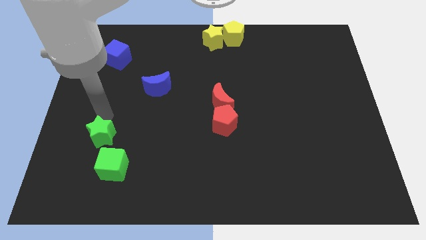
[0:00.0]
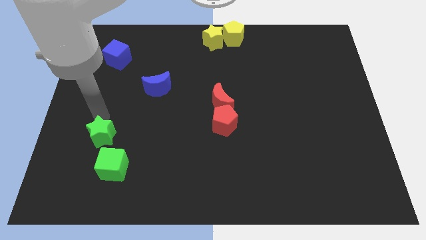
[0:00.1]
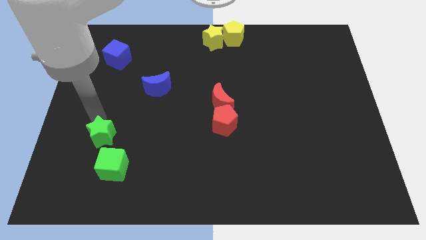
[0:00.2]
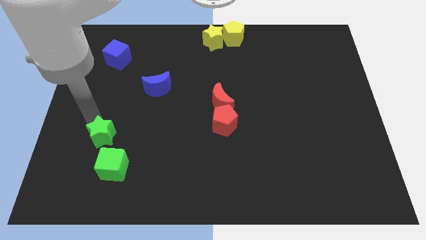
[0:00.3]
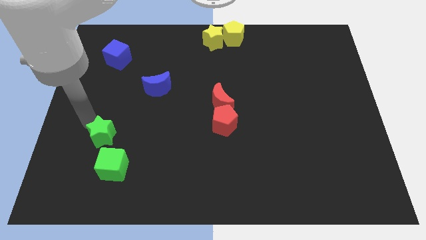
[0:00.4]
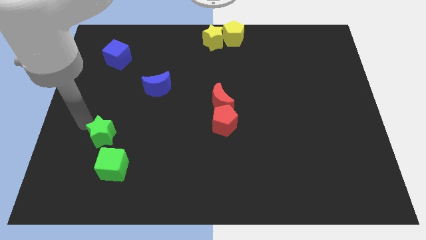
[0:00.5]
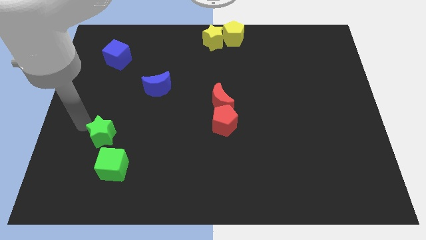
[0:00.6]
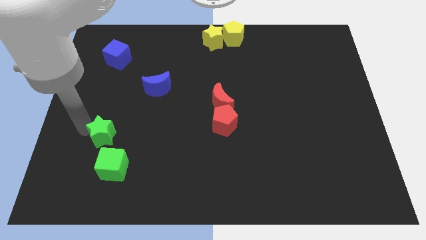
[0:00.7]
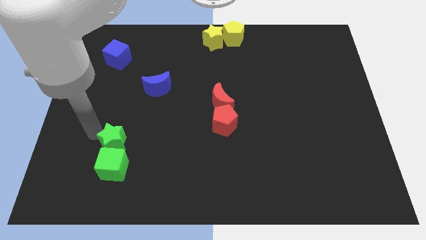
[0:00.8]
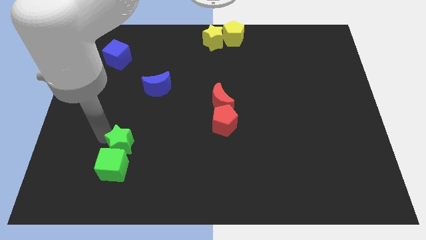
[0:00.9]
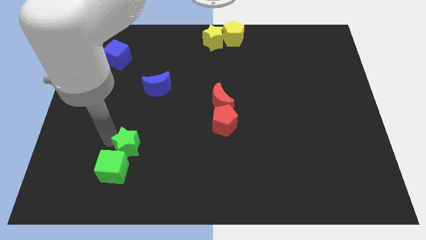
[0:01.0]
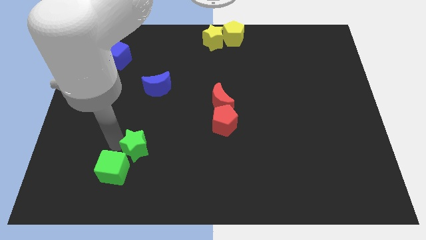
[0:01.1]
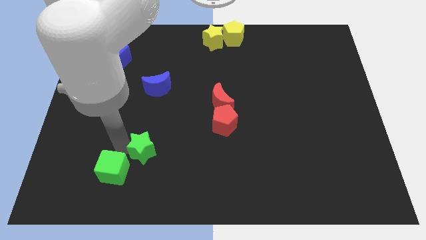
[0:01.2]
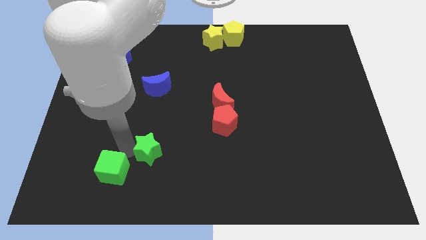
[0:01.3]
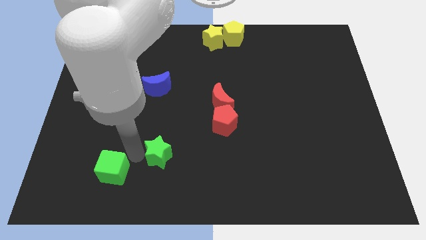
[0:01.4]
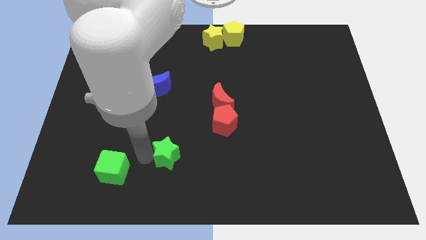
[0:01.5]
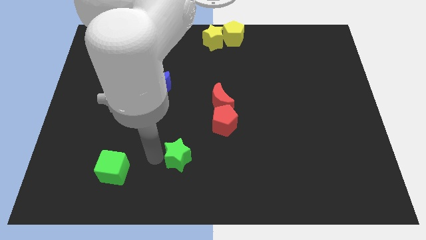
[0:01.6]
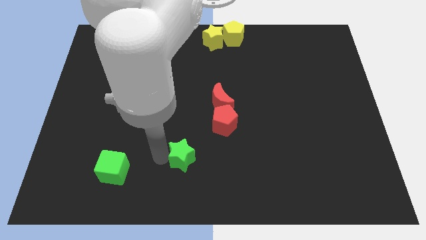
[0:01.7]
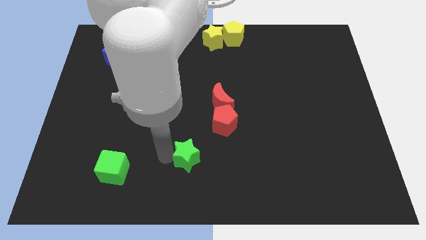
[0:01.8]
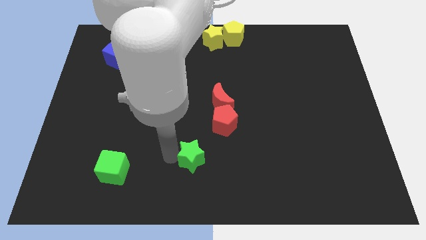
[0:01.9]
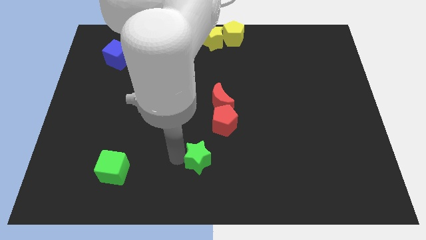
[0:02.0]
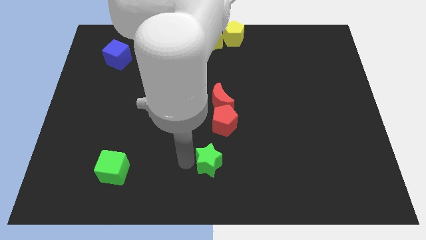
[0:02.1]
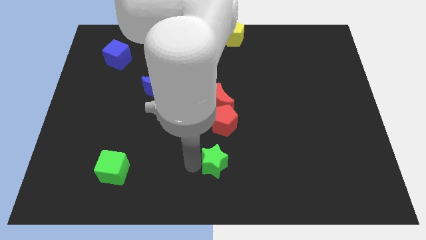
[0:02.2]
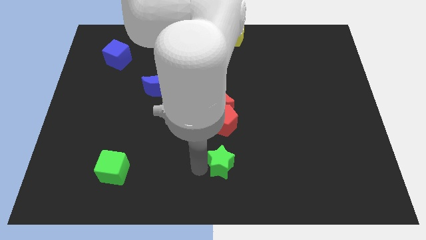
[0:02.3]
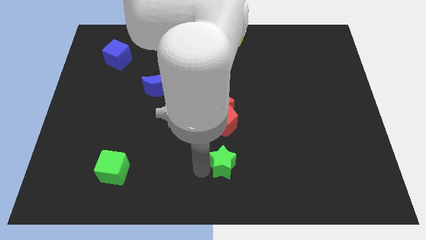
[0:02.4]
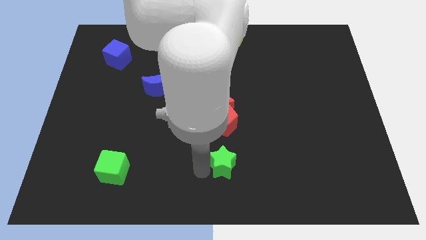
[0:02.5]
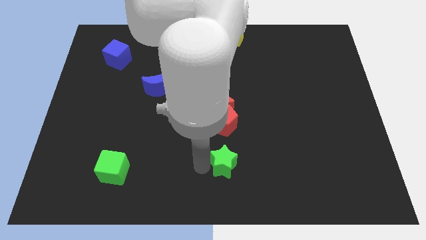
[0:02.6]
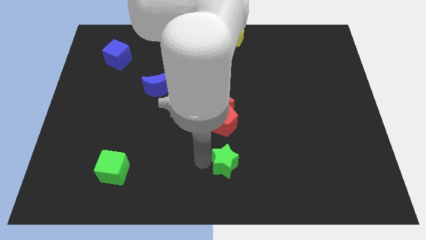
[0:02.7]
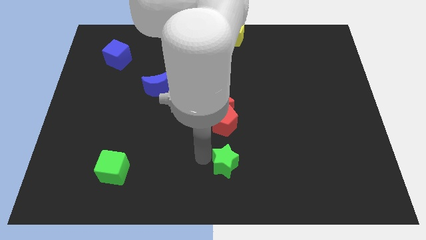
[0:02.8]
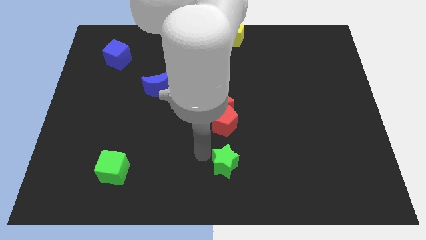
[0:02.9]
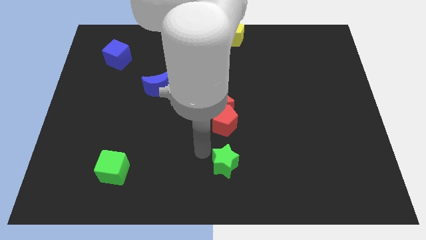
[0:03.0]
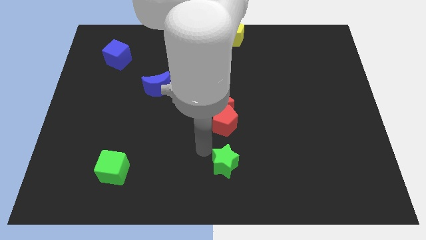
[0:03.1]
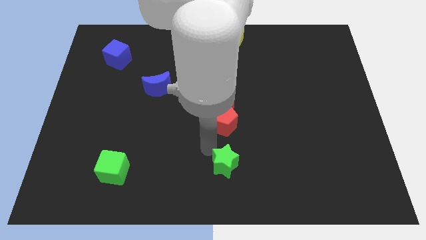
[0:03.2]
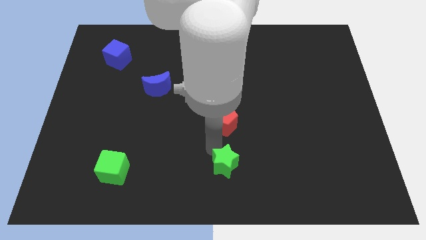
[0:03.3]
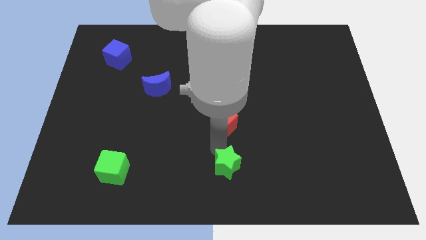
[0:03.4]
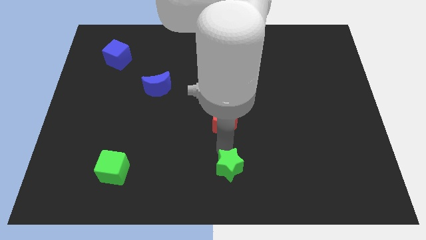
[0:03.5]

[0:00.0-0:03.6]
move the green star parallel below the red pentagon

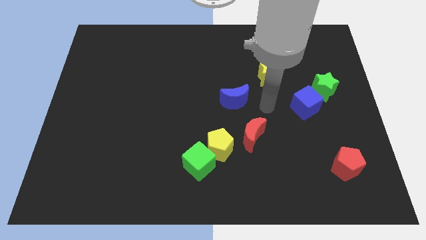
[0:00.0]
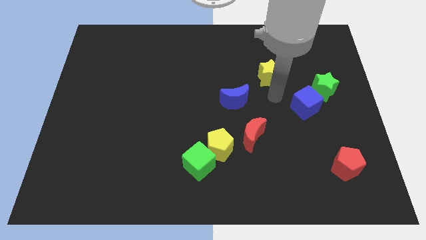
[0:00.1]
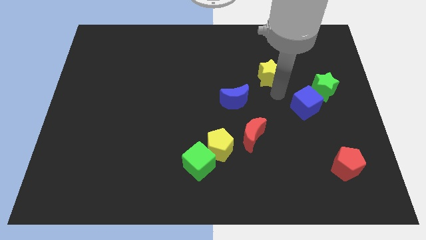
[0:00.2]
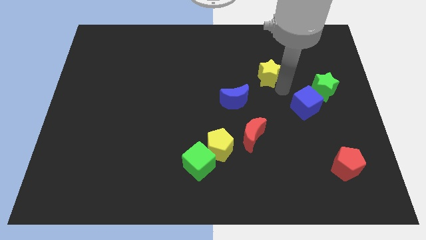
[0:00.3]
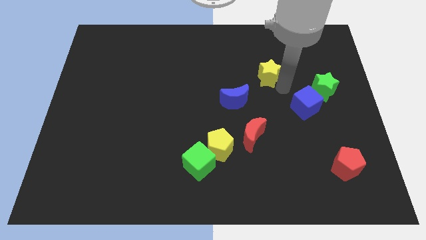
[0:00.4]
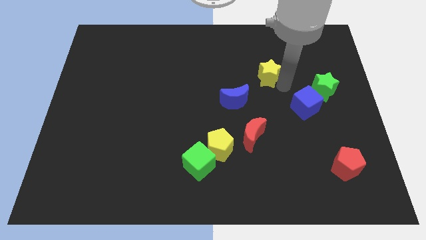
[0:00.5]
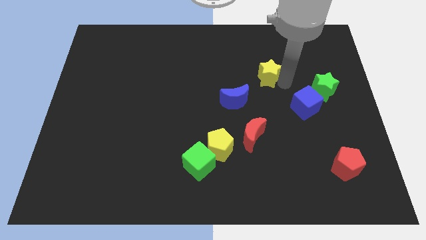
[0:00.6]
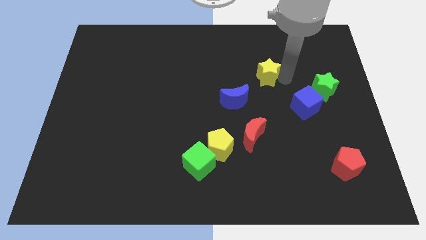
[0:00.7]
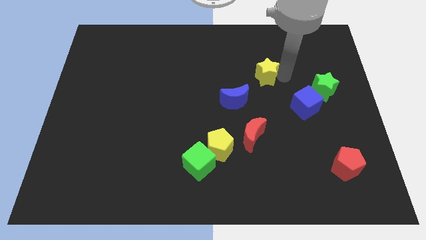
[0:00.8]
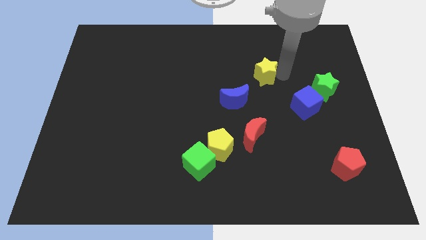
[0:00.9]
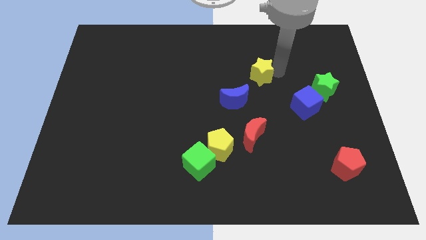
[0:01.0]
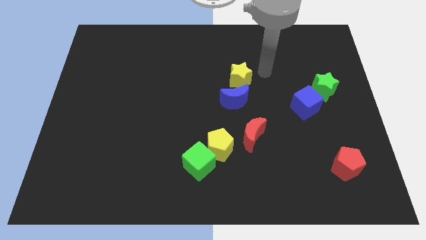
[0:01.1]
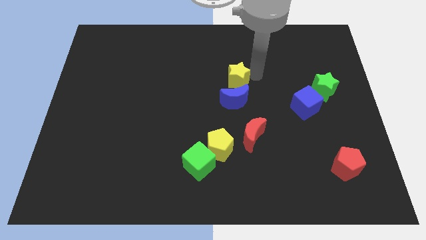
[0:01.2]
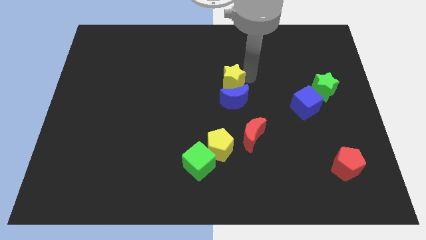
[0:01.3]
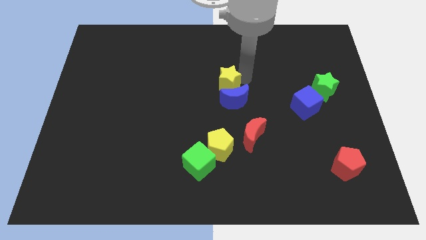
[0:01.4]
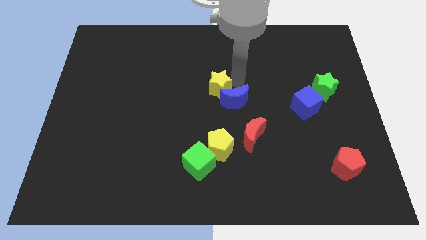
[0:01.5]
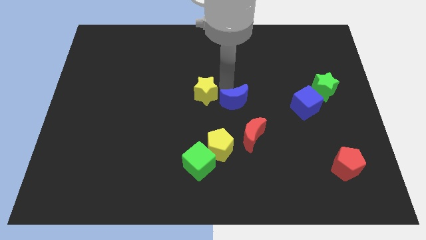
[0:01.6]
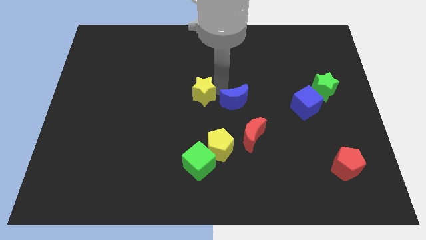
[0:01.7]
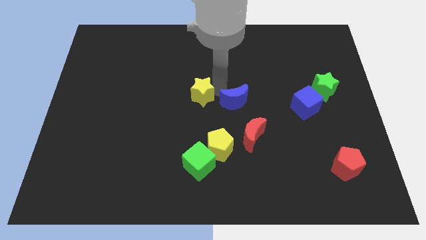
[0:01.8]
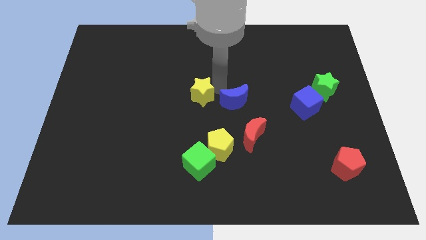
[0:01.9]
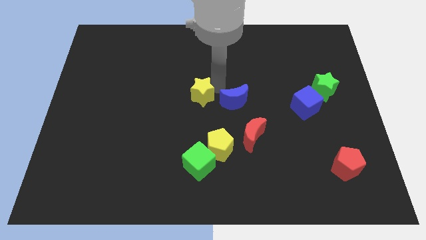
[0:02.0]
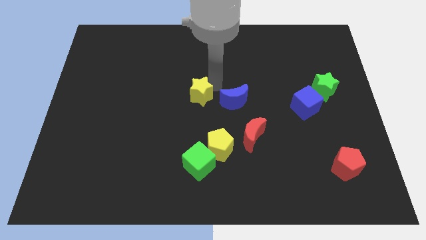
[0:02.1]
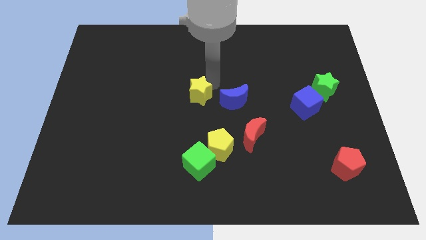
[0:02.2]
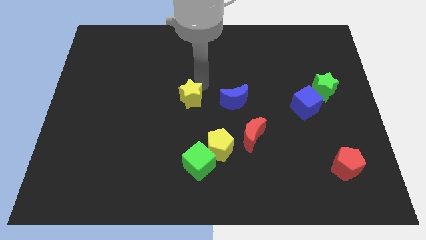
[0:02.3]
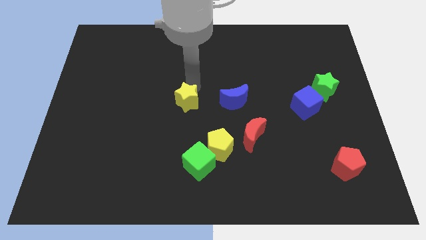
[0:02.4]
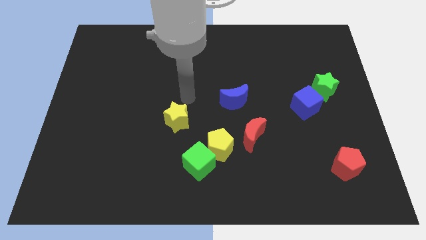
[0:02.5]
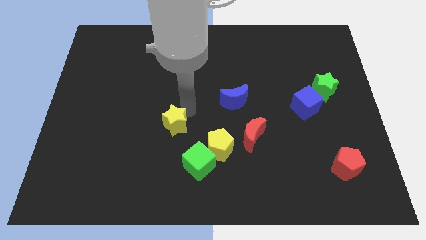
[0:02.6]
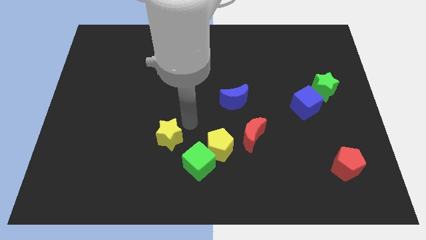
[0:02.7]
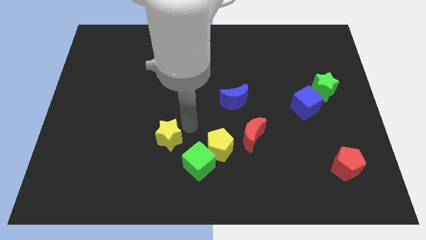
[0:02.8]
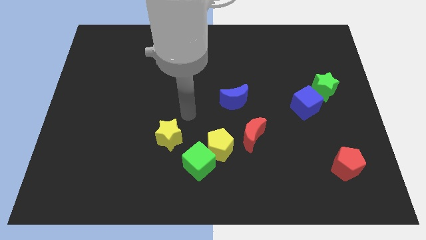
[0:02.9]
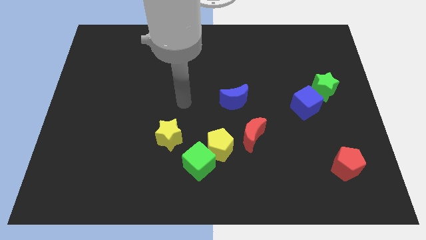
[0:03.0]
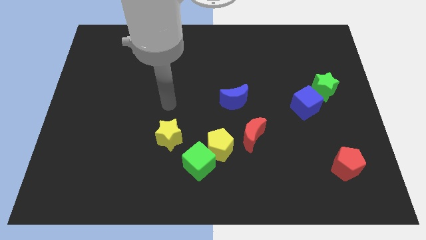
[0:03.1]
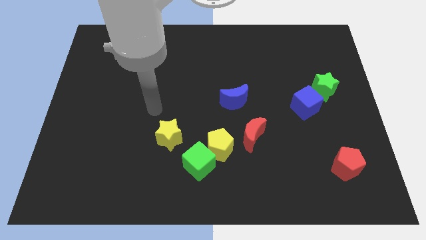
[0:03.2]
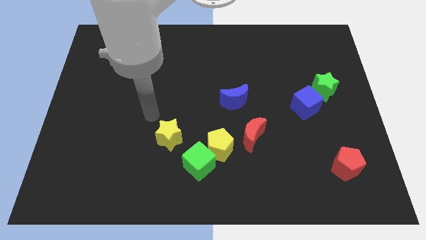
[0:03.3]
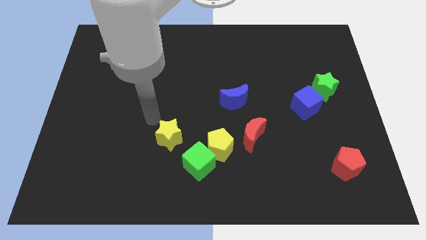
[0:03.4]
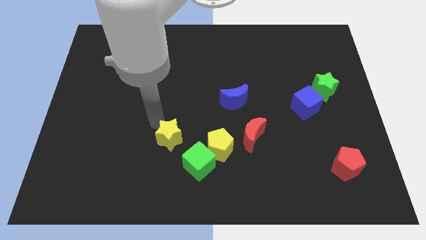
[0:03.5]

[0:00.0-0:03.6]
move the yellow star to the top left of the green cube

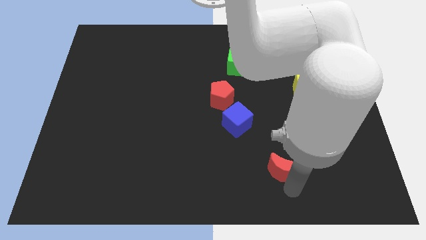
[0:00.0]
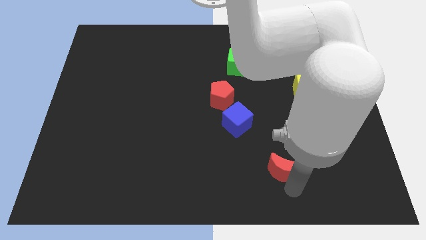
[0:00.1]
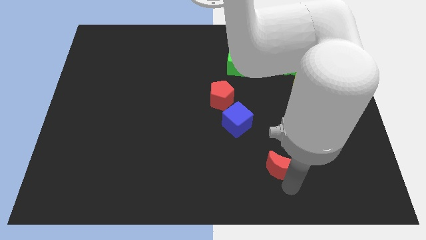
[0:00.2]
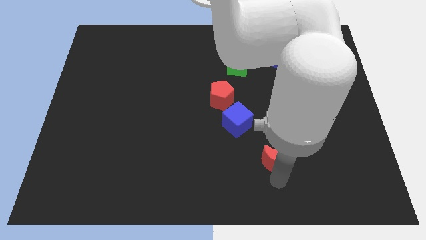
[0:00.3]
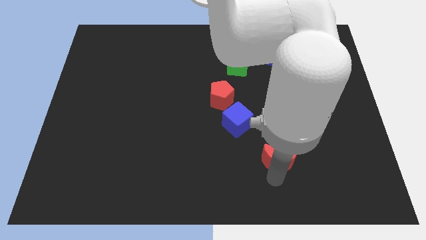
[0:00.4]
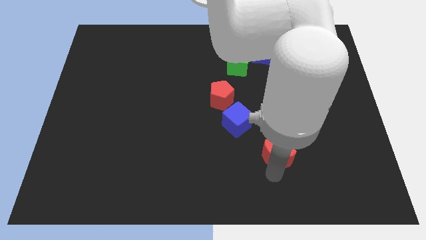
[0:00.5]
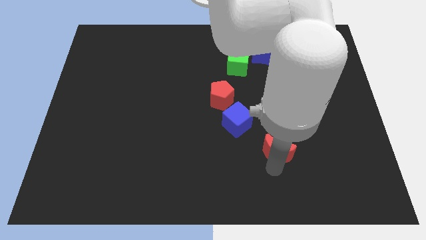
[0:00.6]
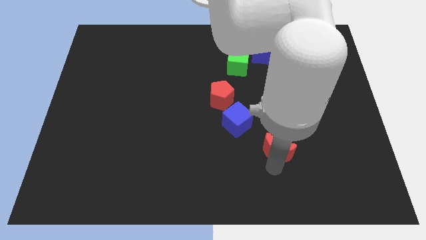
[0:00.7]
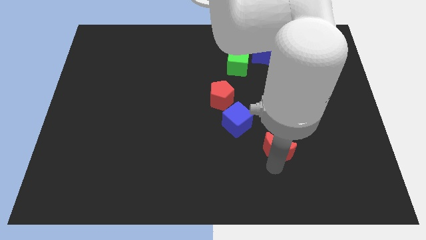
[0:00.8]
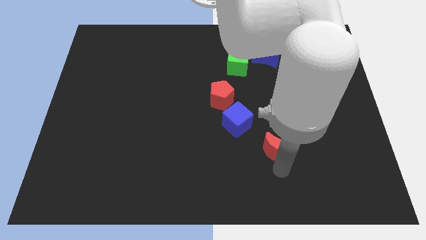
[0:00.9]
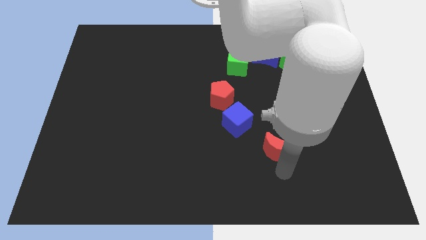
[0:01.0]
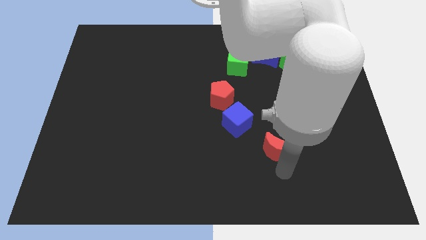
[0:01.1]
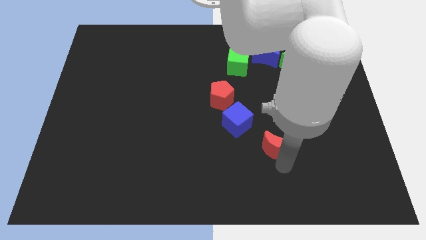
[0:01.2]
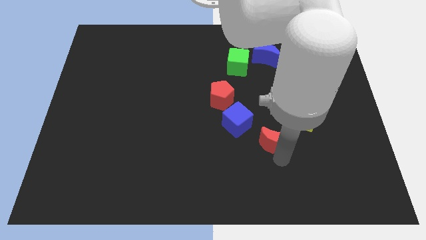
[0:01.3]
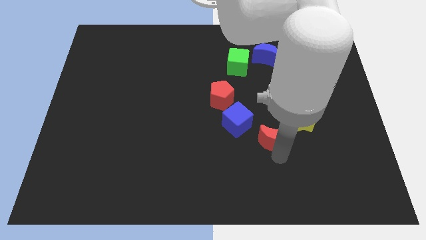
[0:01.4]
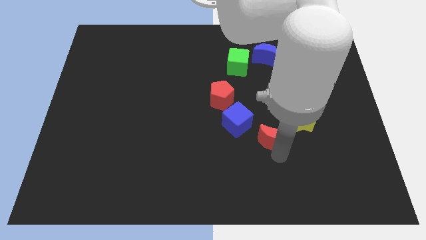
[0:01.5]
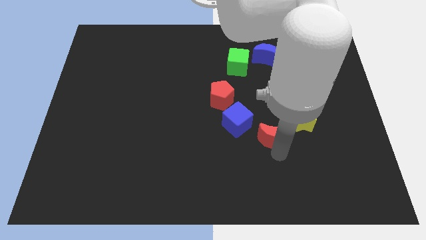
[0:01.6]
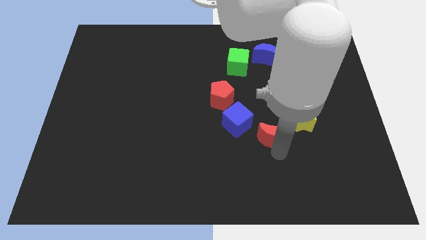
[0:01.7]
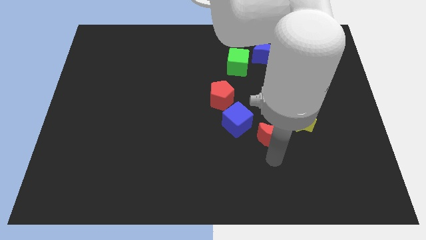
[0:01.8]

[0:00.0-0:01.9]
move red crescent in between yellow star and blue cube
